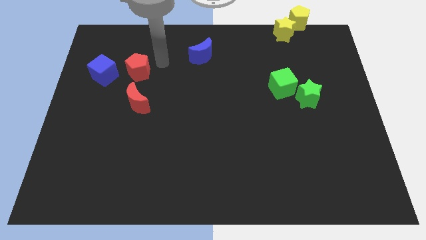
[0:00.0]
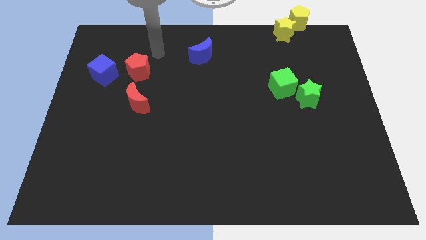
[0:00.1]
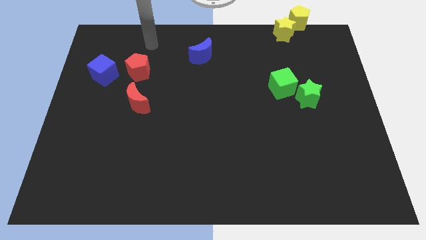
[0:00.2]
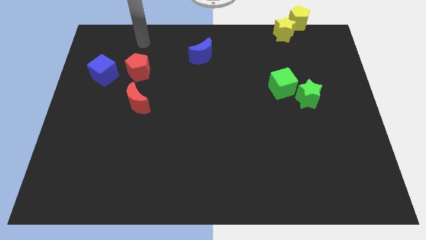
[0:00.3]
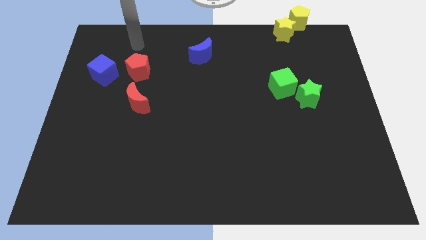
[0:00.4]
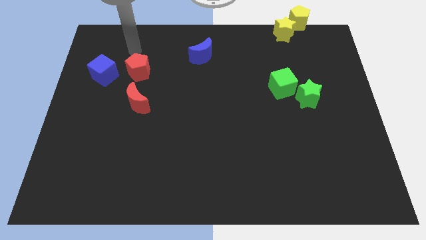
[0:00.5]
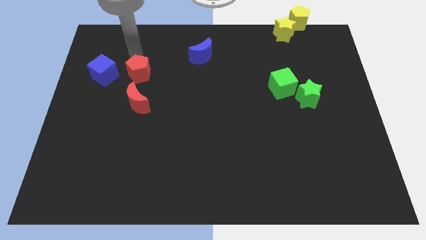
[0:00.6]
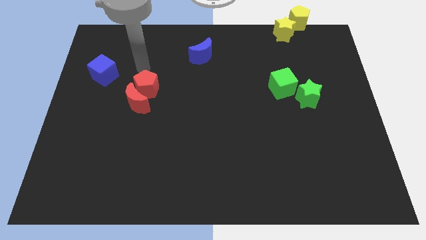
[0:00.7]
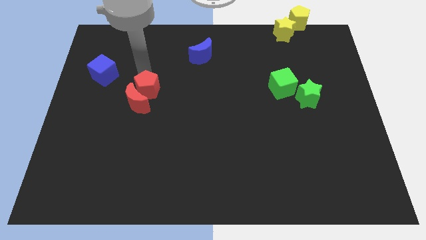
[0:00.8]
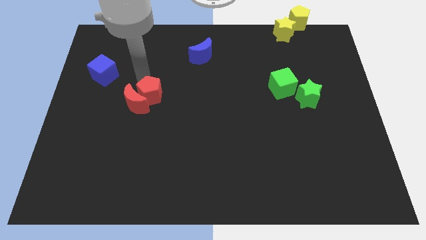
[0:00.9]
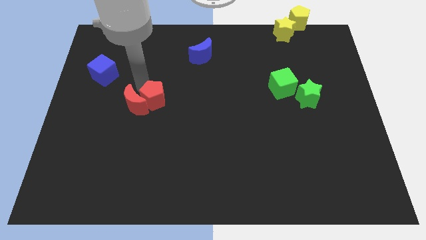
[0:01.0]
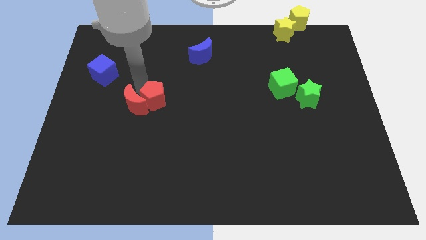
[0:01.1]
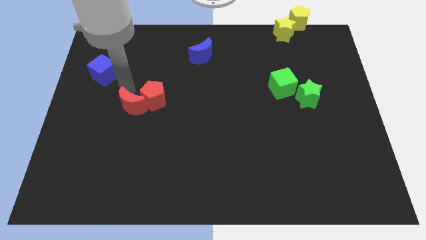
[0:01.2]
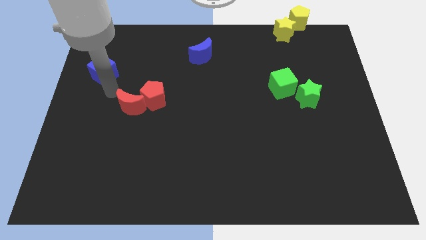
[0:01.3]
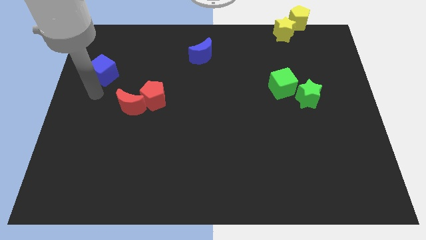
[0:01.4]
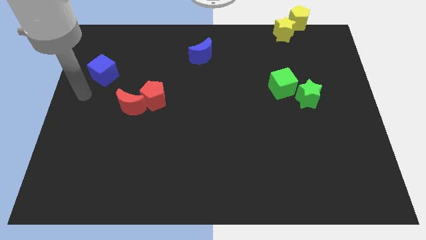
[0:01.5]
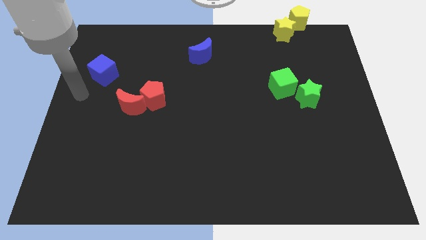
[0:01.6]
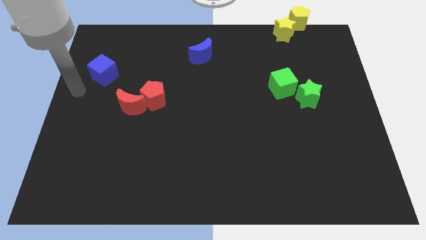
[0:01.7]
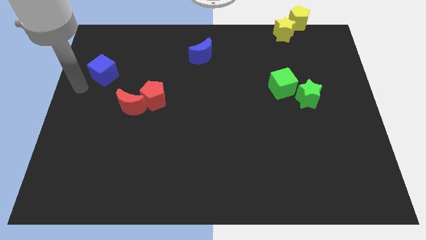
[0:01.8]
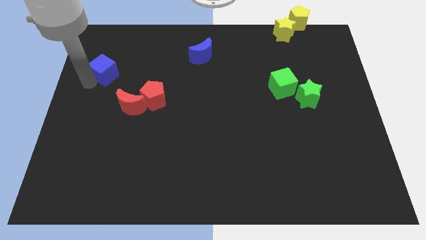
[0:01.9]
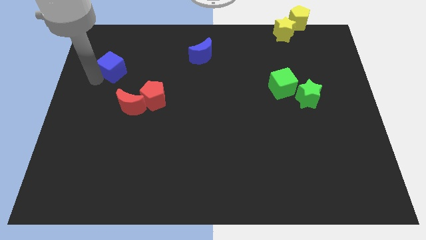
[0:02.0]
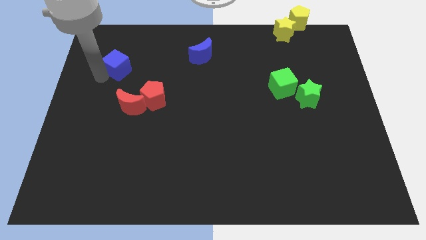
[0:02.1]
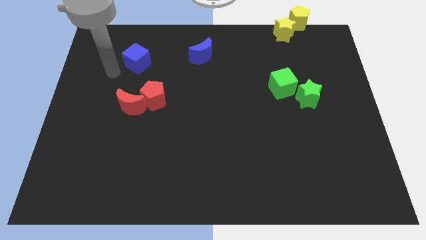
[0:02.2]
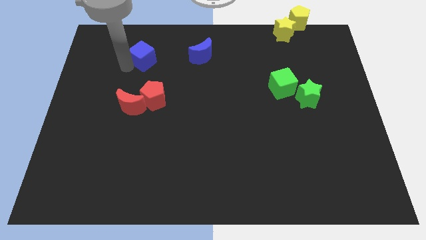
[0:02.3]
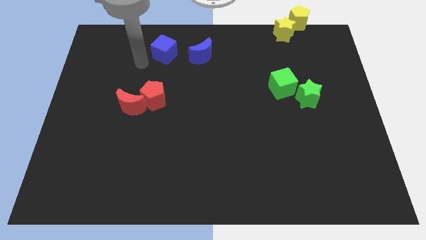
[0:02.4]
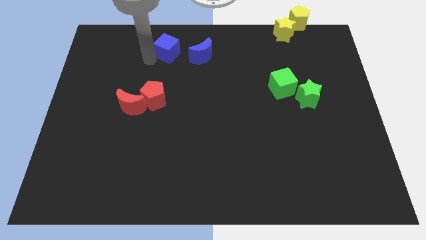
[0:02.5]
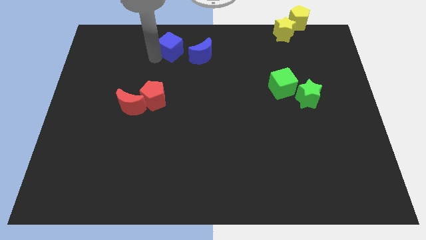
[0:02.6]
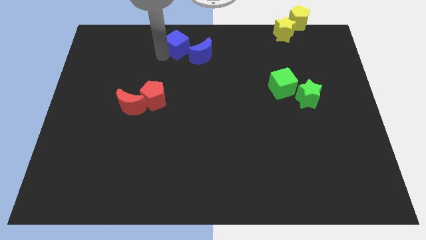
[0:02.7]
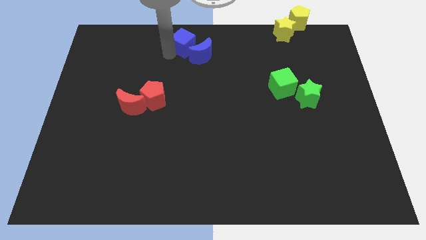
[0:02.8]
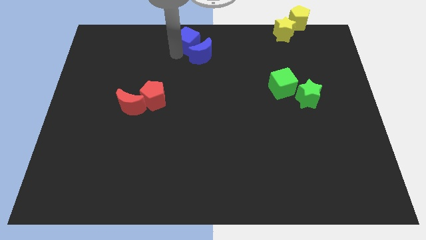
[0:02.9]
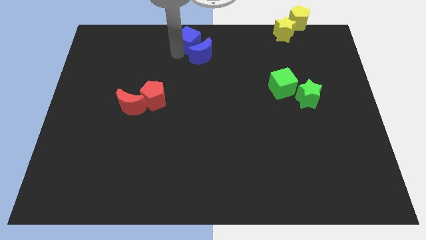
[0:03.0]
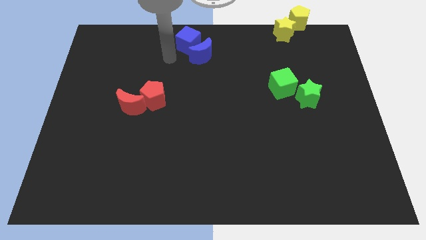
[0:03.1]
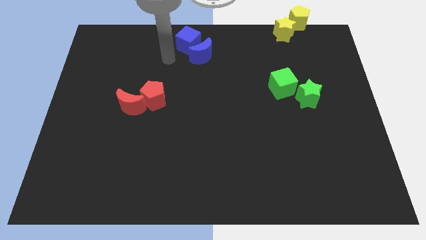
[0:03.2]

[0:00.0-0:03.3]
push the blue cube to top of the blue crescent

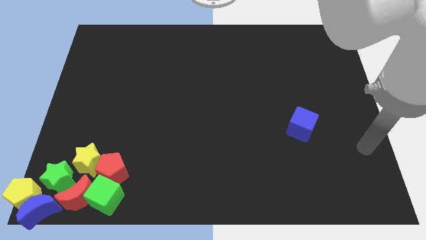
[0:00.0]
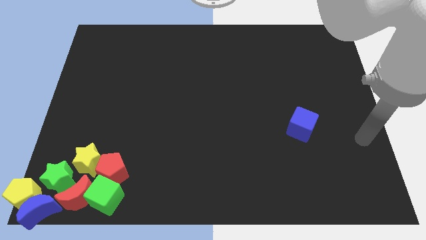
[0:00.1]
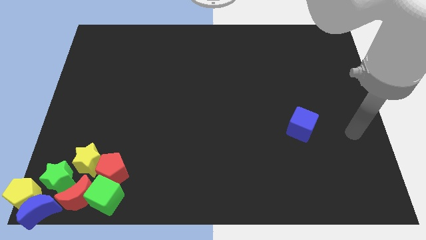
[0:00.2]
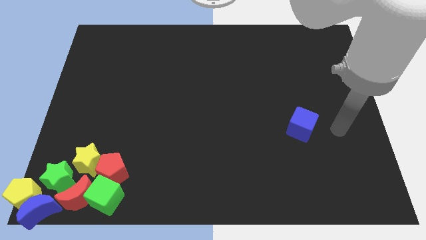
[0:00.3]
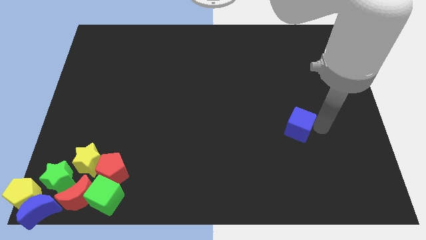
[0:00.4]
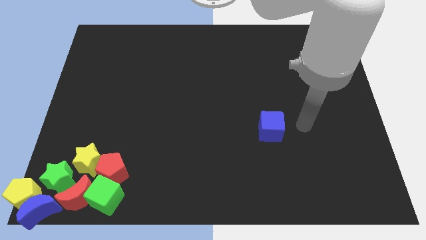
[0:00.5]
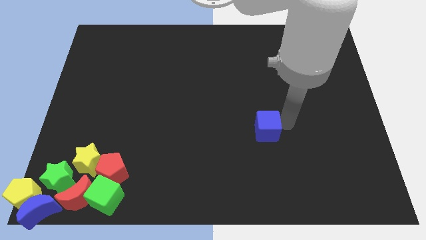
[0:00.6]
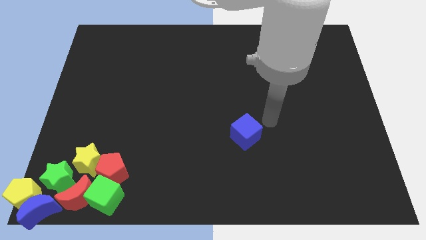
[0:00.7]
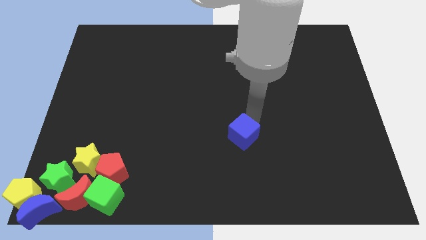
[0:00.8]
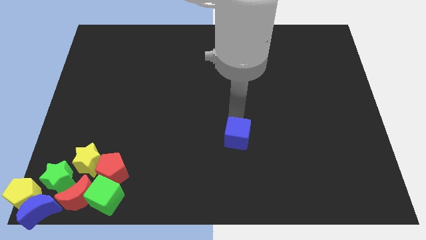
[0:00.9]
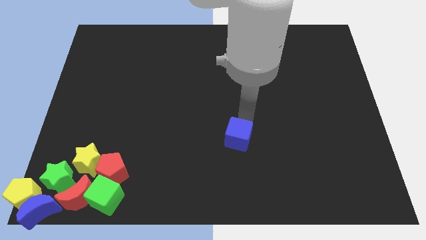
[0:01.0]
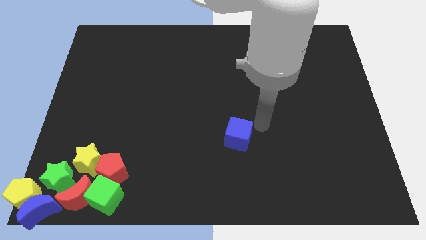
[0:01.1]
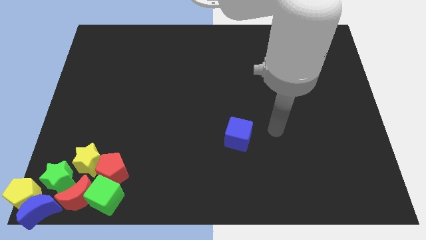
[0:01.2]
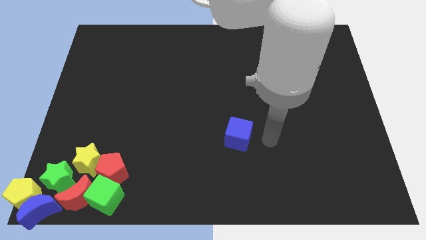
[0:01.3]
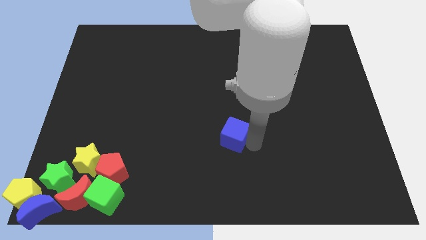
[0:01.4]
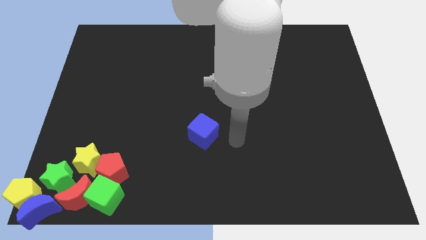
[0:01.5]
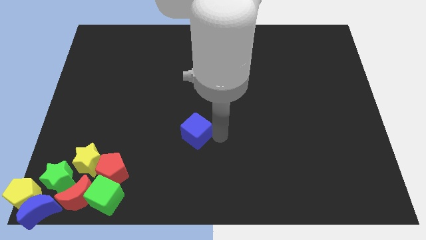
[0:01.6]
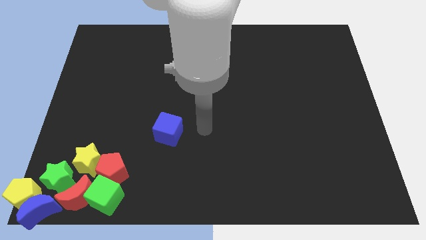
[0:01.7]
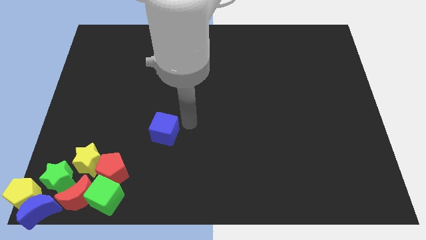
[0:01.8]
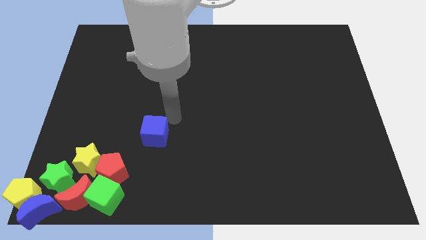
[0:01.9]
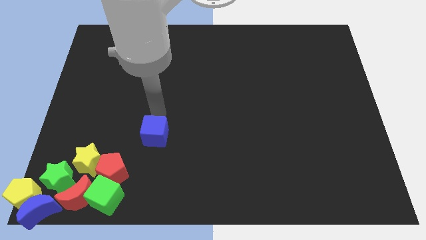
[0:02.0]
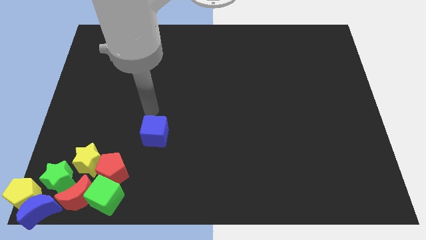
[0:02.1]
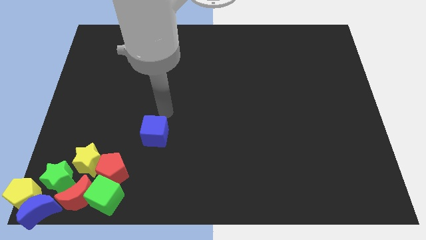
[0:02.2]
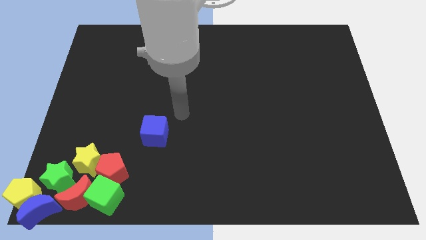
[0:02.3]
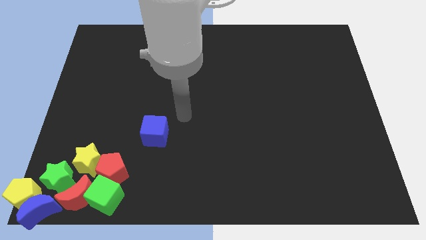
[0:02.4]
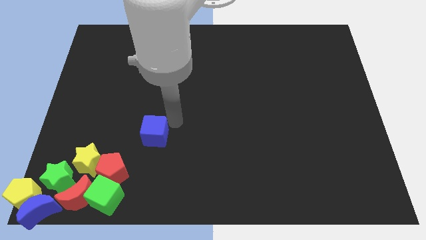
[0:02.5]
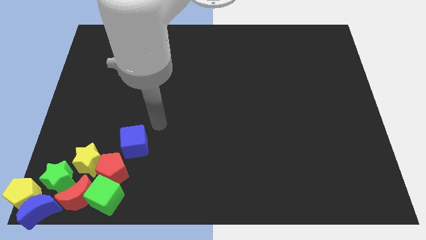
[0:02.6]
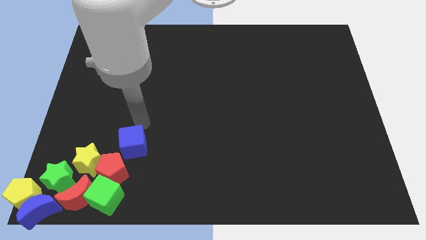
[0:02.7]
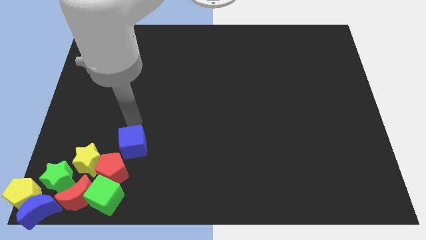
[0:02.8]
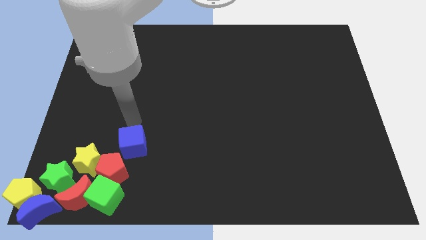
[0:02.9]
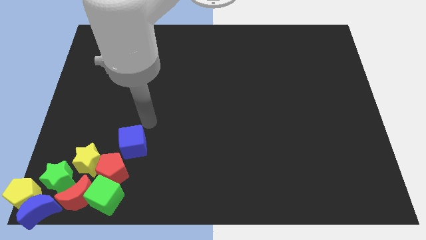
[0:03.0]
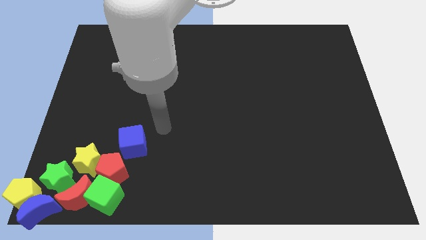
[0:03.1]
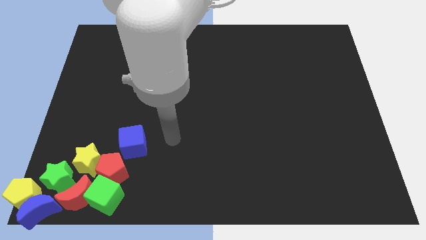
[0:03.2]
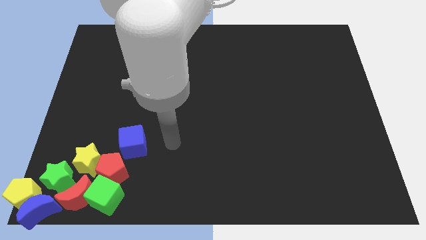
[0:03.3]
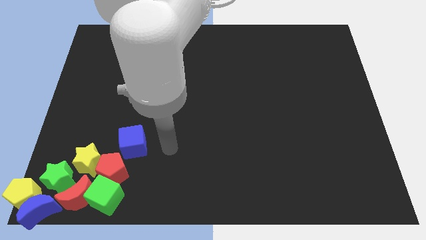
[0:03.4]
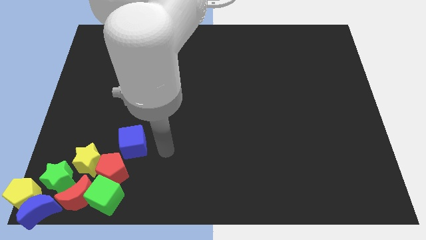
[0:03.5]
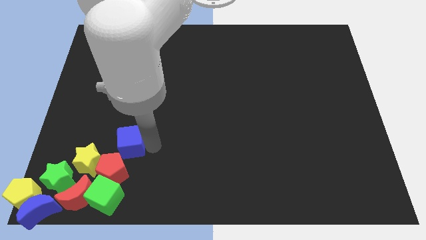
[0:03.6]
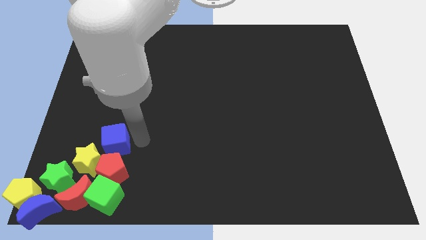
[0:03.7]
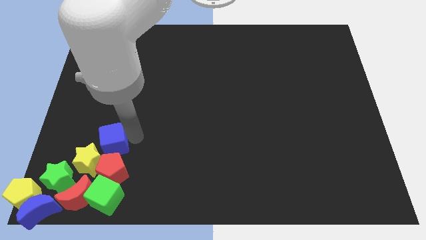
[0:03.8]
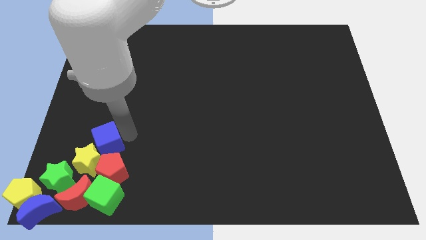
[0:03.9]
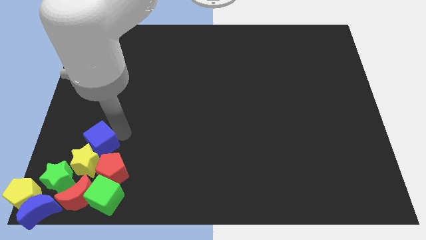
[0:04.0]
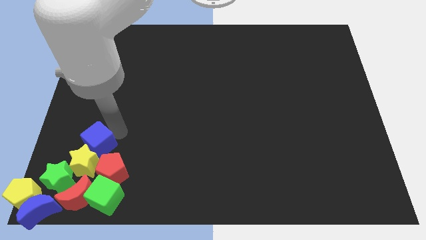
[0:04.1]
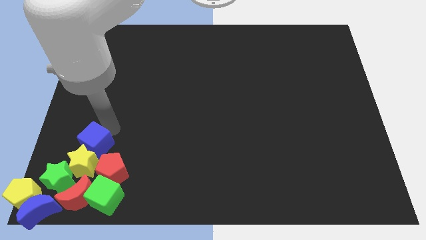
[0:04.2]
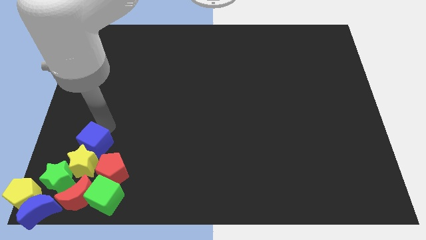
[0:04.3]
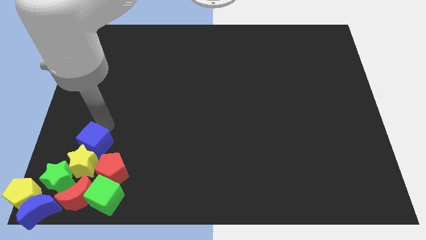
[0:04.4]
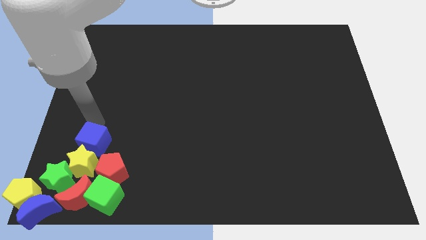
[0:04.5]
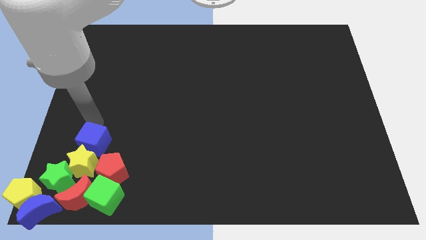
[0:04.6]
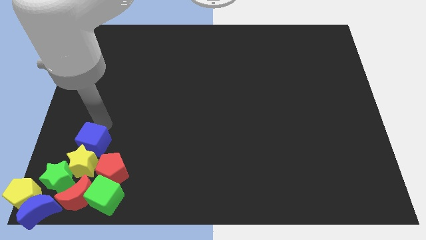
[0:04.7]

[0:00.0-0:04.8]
place the blue cube at the top of the yellow star

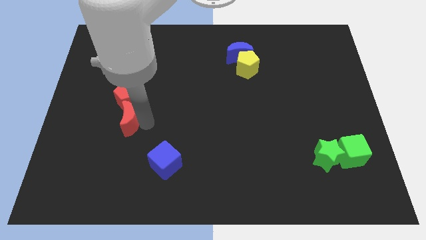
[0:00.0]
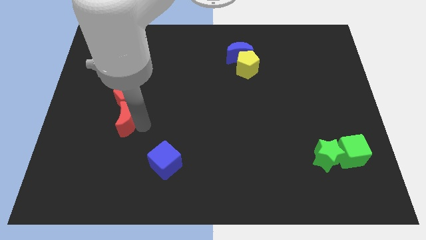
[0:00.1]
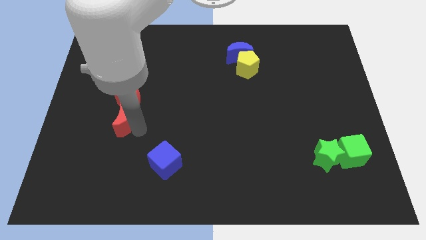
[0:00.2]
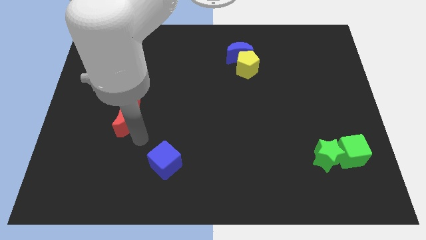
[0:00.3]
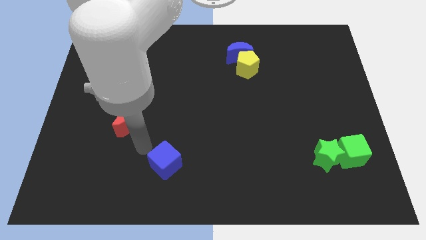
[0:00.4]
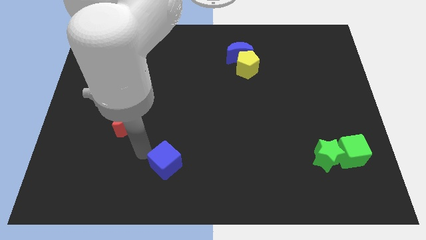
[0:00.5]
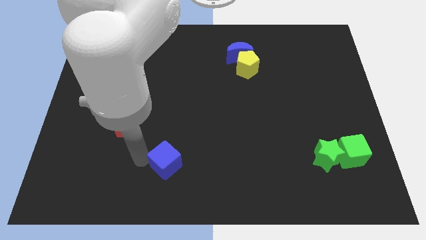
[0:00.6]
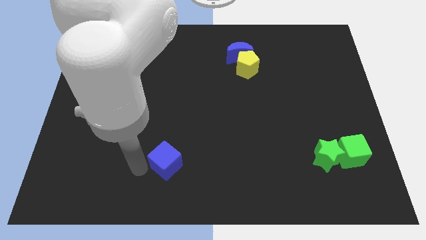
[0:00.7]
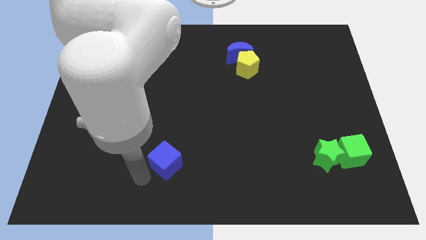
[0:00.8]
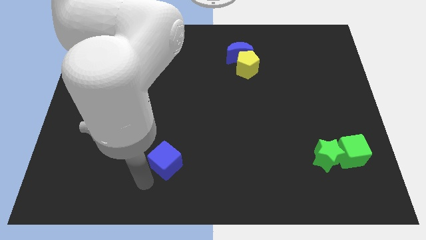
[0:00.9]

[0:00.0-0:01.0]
move your arm left to the blue cube
